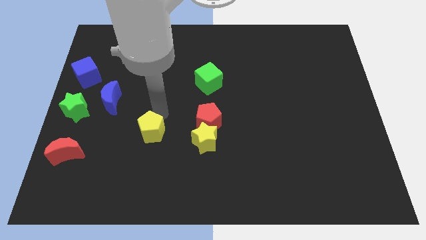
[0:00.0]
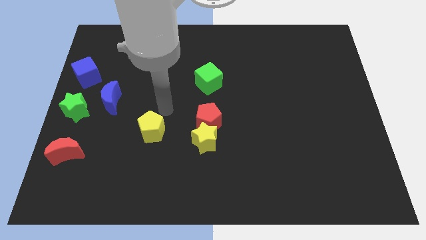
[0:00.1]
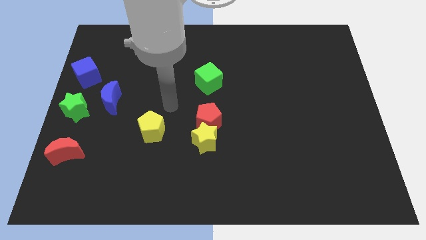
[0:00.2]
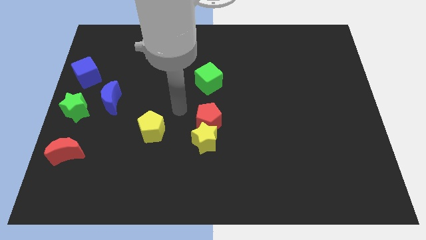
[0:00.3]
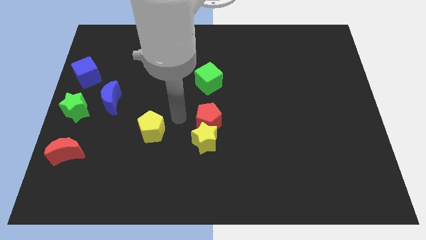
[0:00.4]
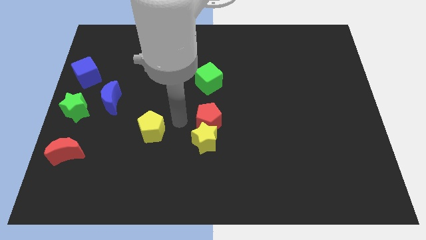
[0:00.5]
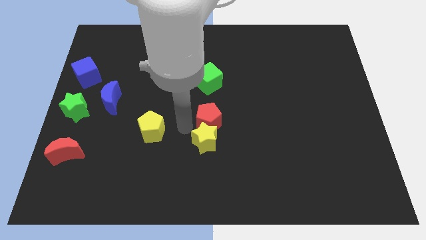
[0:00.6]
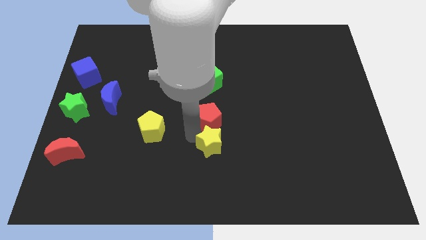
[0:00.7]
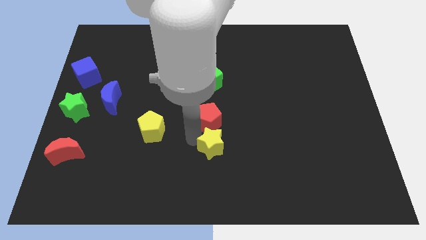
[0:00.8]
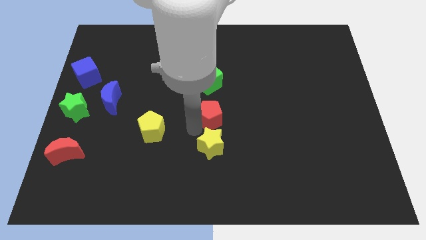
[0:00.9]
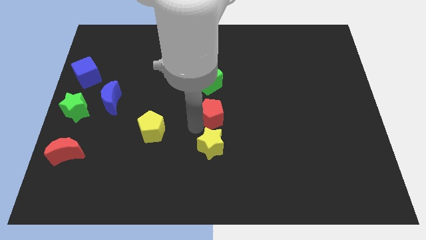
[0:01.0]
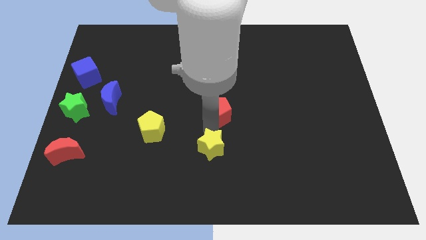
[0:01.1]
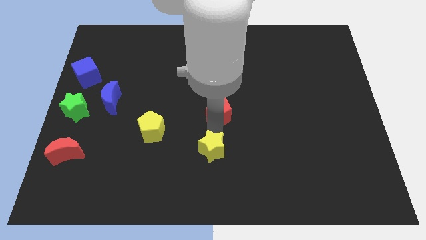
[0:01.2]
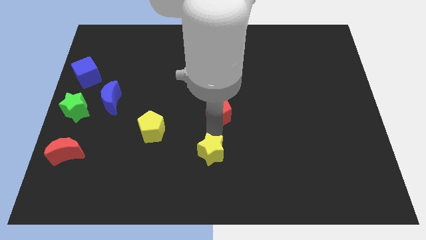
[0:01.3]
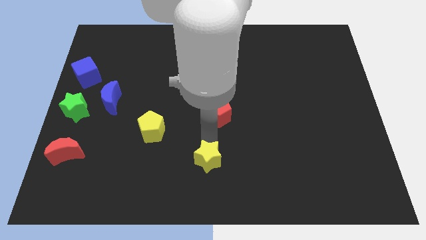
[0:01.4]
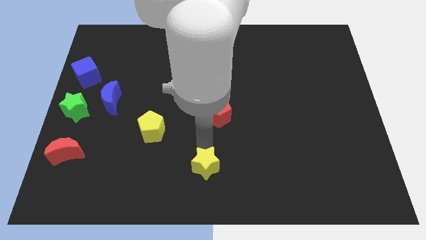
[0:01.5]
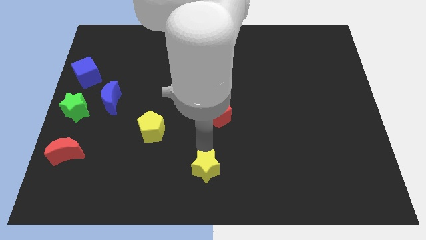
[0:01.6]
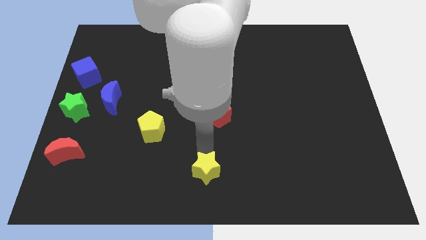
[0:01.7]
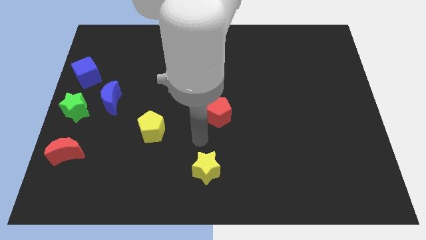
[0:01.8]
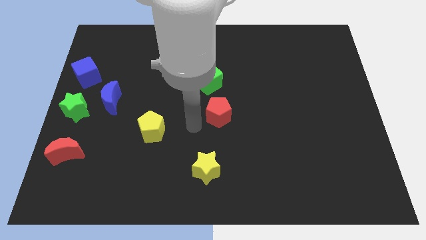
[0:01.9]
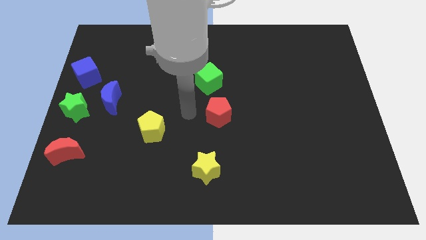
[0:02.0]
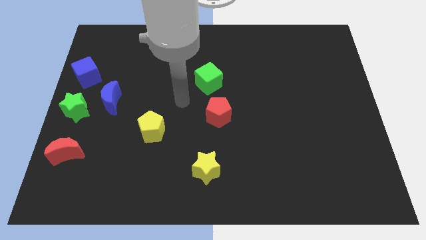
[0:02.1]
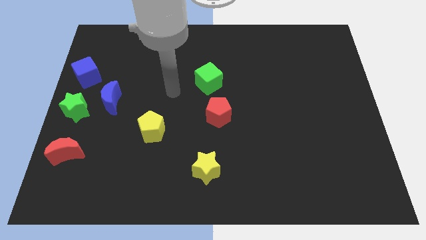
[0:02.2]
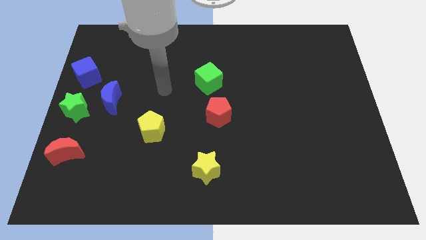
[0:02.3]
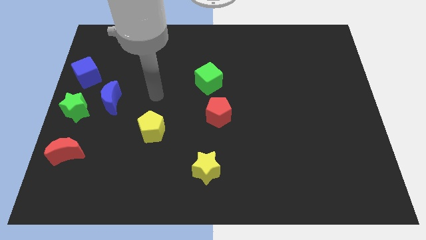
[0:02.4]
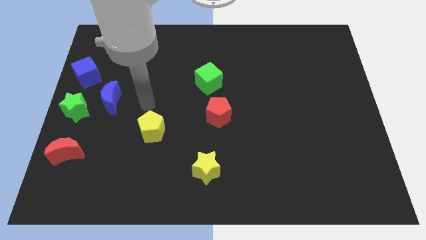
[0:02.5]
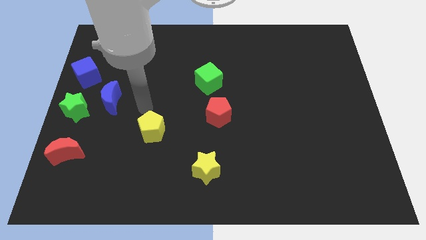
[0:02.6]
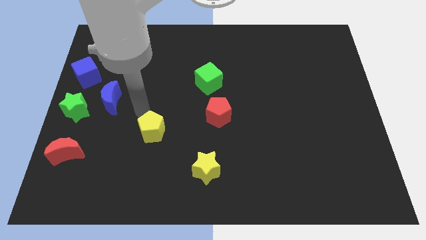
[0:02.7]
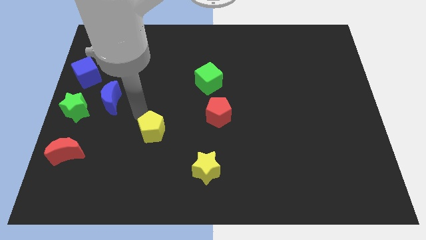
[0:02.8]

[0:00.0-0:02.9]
move the yellow star away from the red pentagon

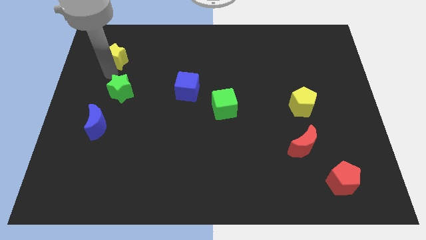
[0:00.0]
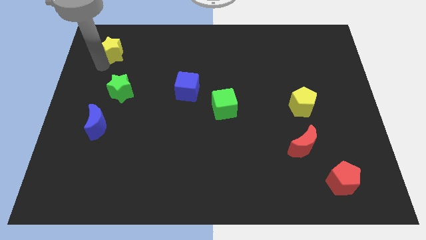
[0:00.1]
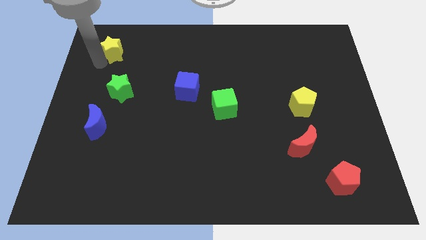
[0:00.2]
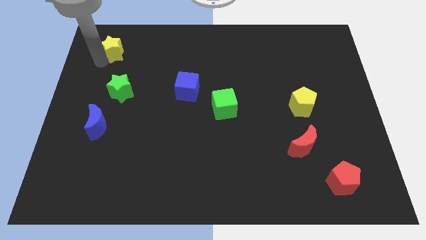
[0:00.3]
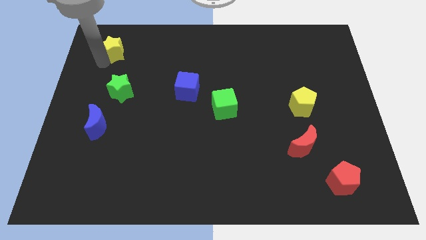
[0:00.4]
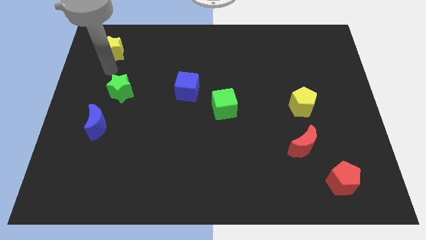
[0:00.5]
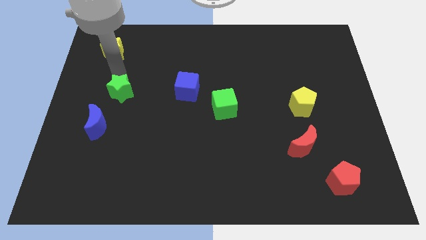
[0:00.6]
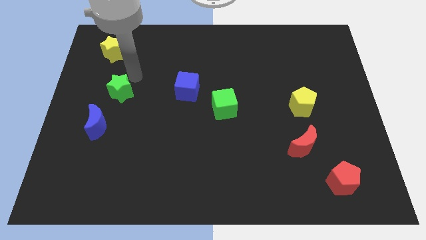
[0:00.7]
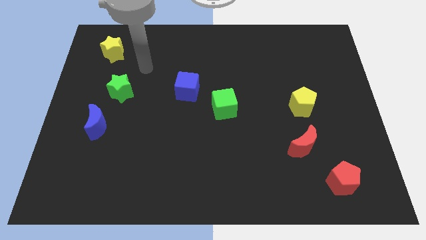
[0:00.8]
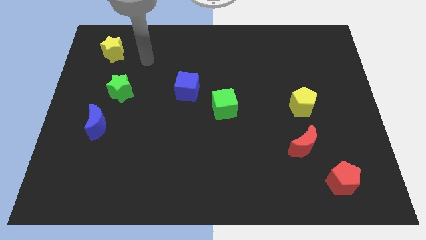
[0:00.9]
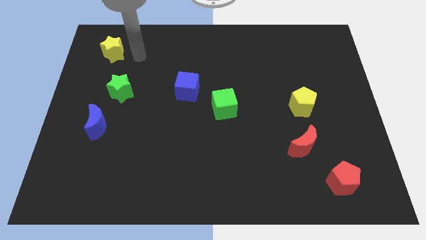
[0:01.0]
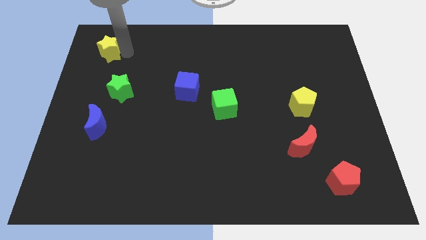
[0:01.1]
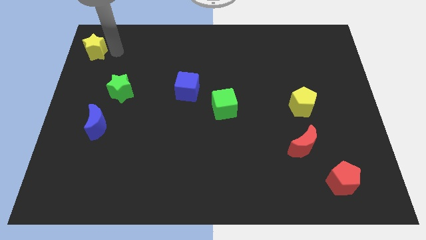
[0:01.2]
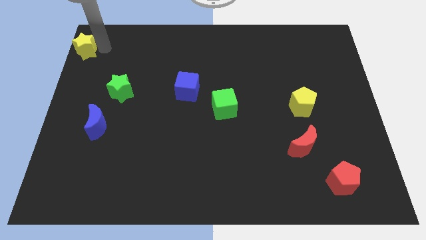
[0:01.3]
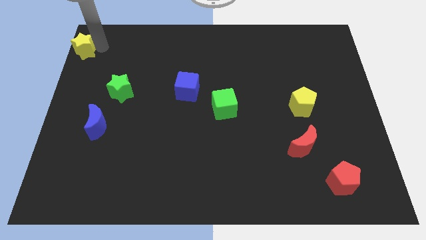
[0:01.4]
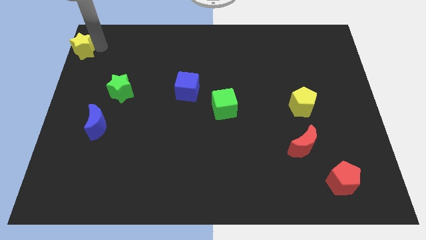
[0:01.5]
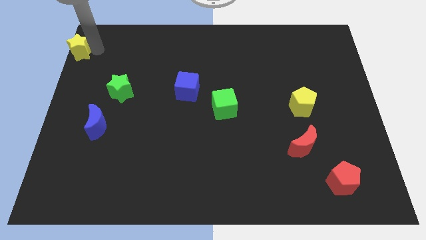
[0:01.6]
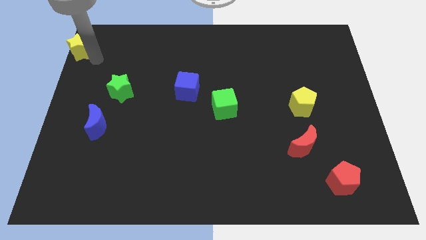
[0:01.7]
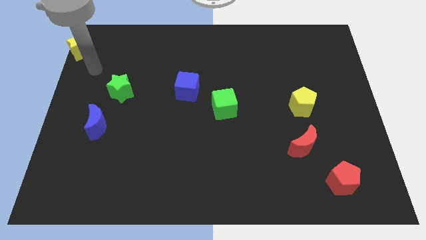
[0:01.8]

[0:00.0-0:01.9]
push the yellow star towards the top left of the board

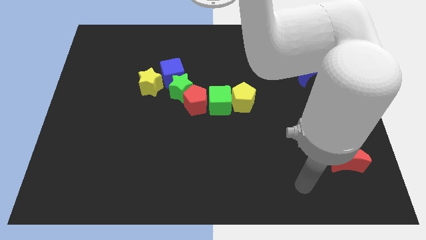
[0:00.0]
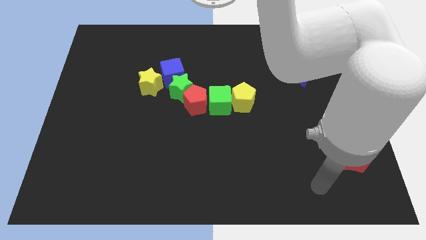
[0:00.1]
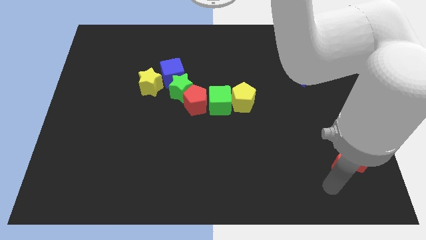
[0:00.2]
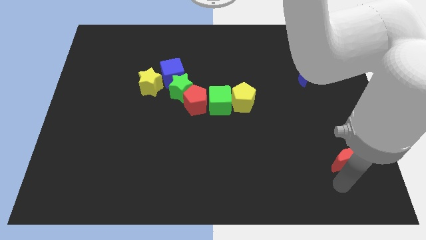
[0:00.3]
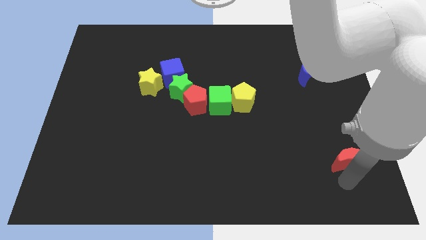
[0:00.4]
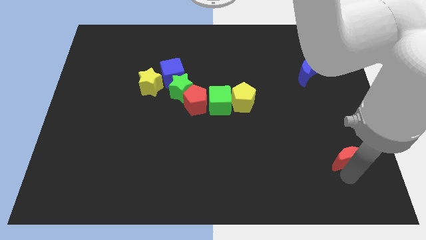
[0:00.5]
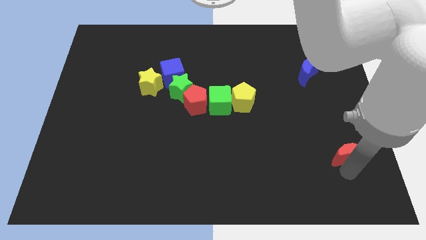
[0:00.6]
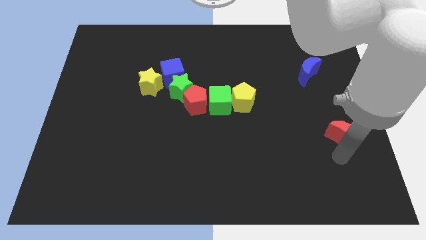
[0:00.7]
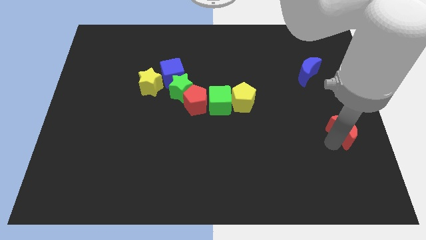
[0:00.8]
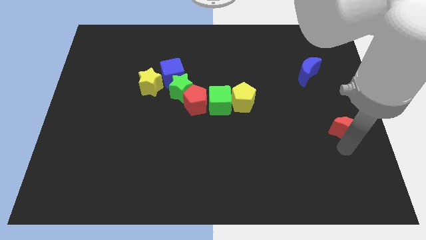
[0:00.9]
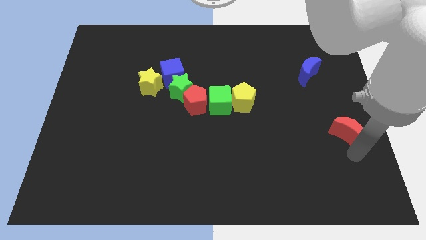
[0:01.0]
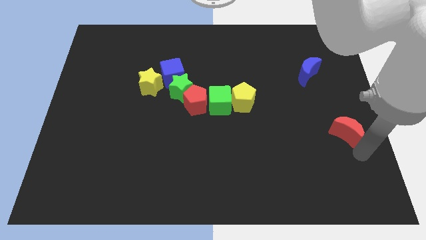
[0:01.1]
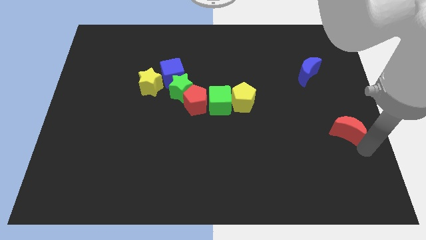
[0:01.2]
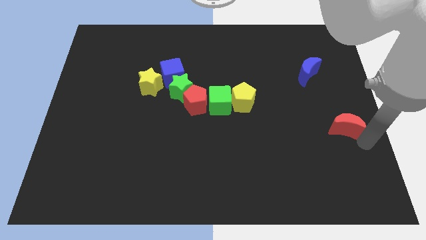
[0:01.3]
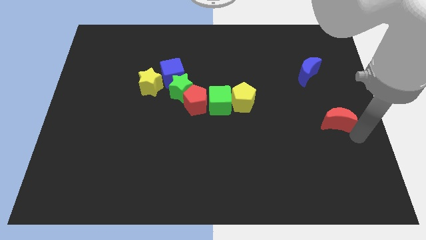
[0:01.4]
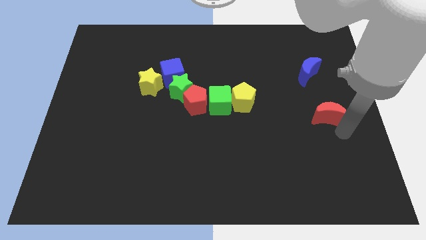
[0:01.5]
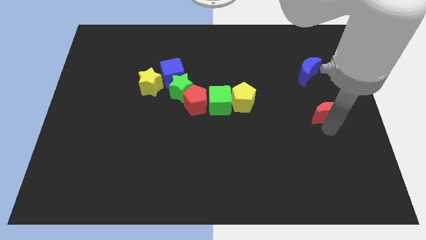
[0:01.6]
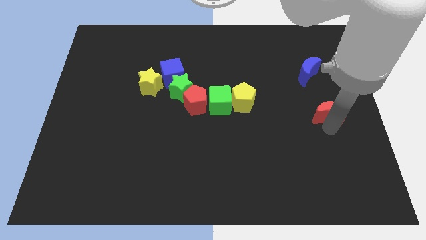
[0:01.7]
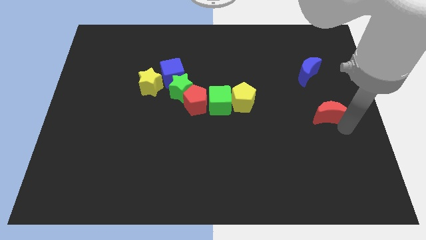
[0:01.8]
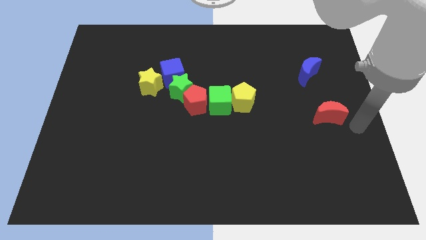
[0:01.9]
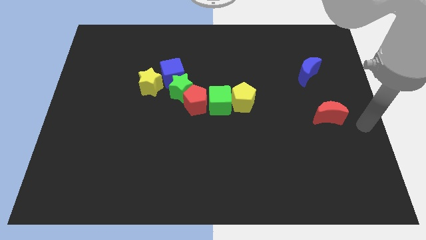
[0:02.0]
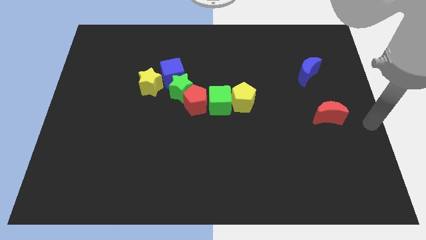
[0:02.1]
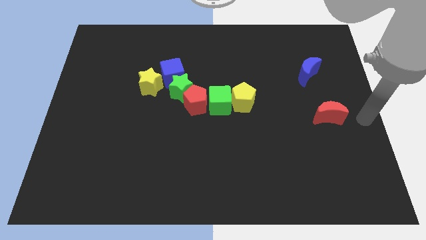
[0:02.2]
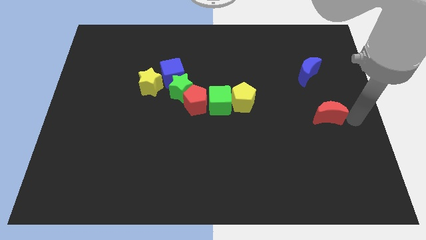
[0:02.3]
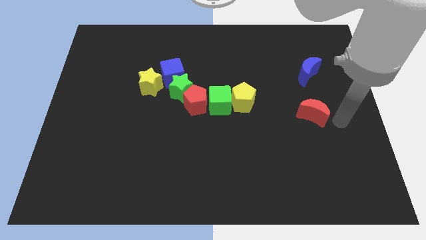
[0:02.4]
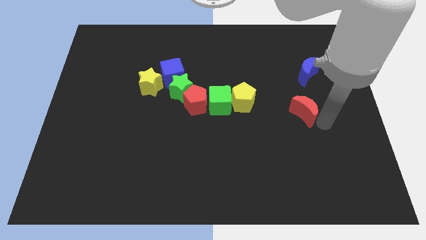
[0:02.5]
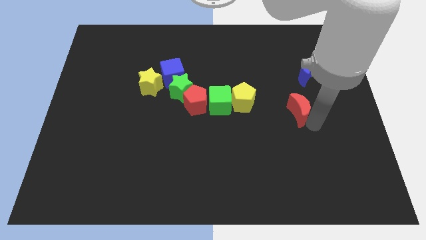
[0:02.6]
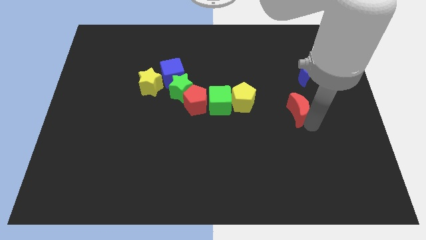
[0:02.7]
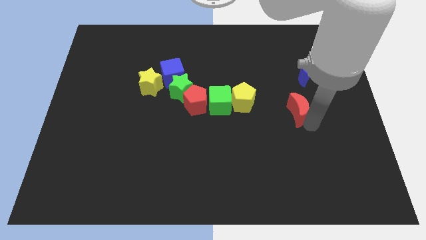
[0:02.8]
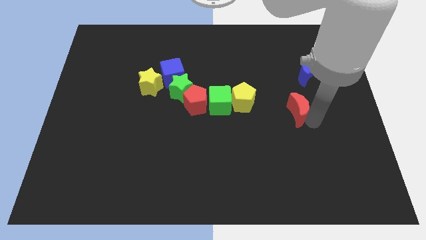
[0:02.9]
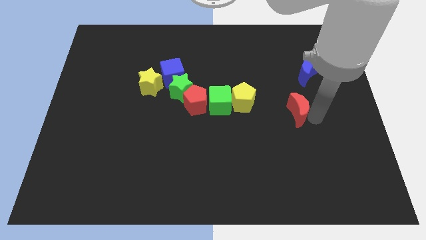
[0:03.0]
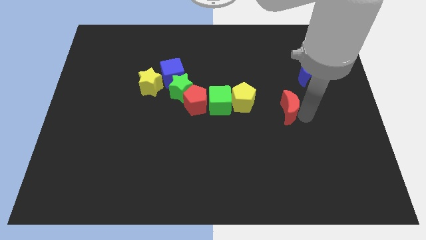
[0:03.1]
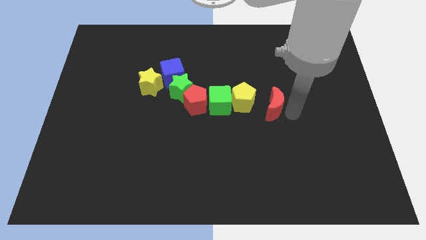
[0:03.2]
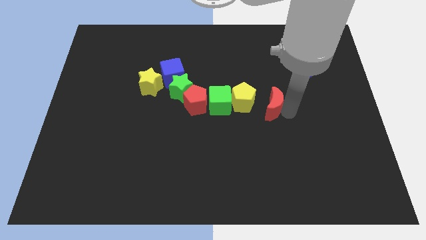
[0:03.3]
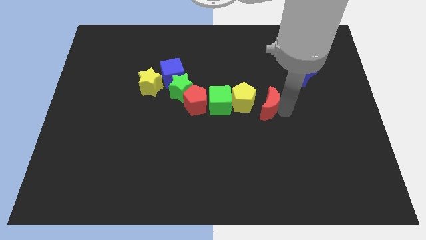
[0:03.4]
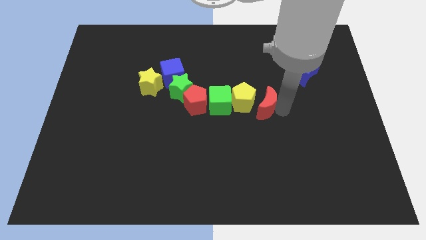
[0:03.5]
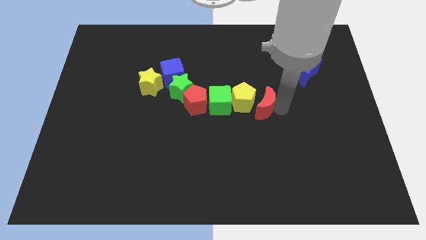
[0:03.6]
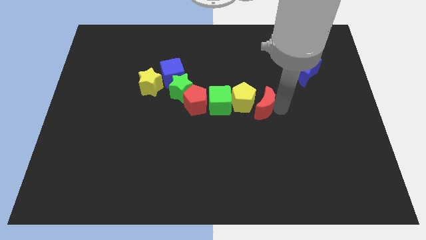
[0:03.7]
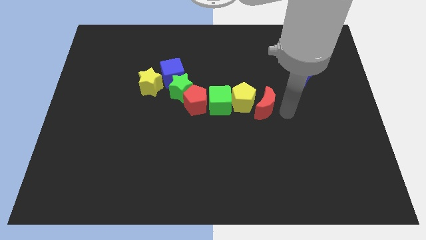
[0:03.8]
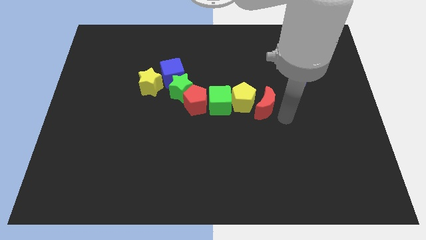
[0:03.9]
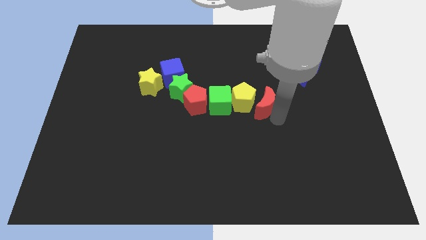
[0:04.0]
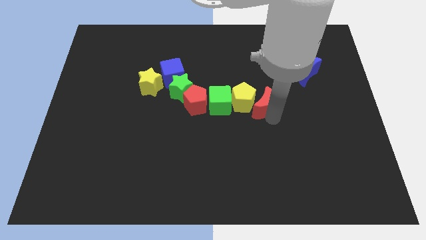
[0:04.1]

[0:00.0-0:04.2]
move the red crescent to the right of the yellow pentagon

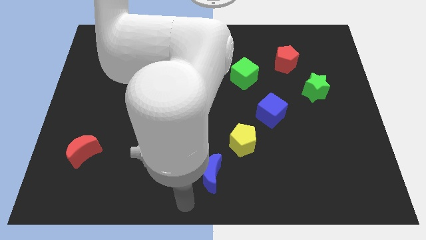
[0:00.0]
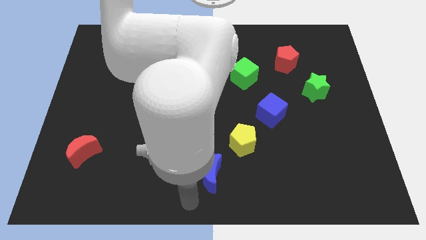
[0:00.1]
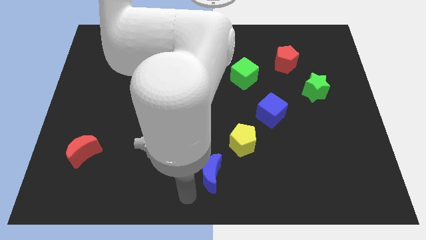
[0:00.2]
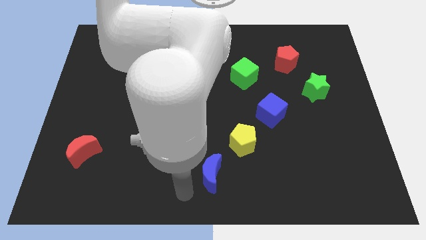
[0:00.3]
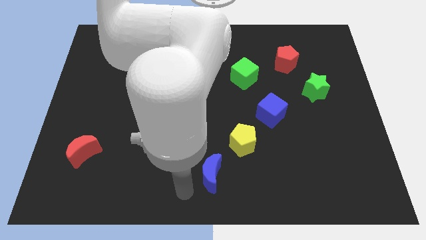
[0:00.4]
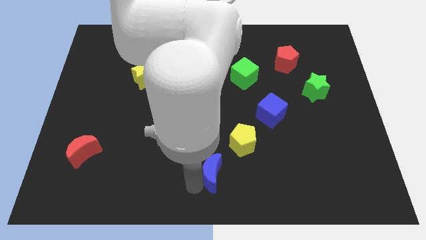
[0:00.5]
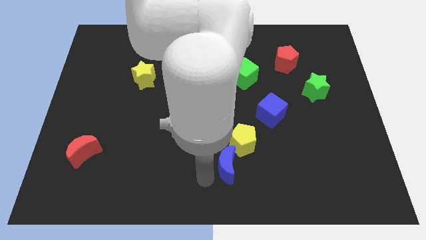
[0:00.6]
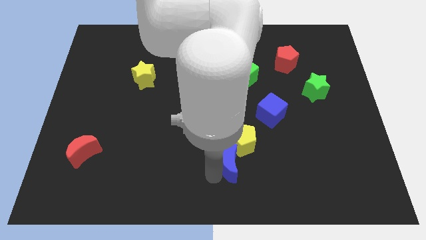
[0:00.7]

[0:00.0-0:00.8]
push the blue moon towards the yellow pentagon
